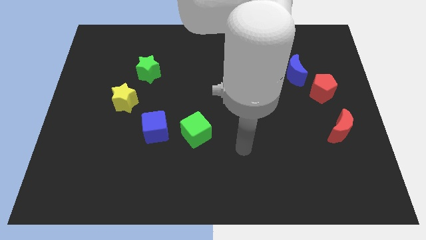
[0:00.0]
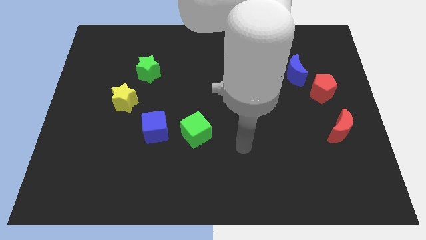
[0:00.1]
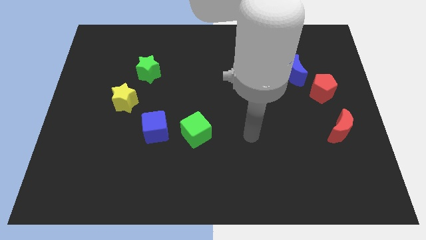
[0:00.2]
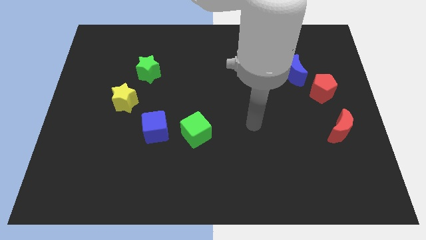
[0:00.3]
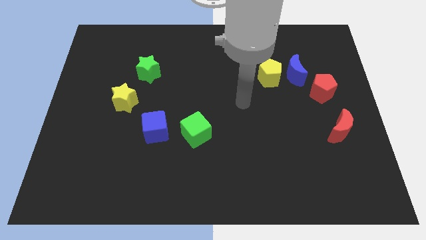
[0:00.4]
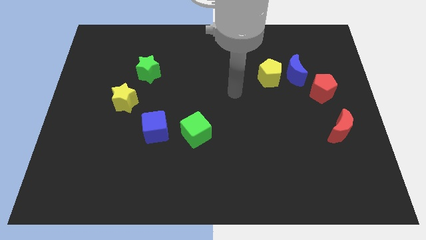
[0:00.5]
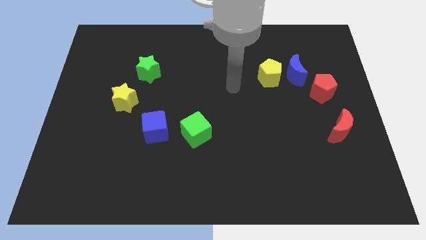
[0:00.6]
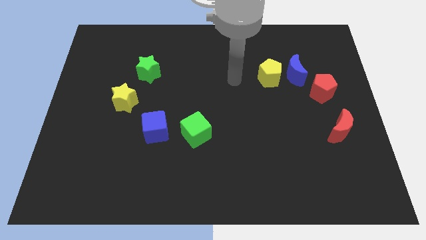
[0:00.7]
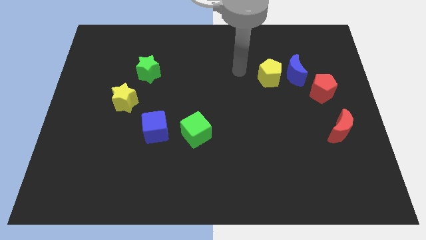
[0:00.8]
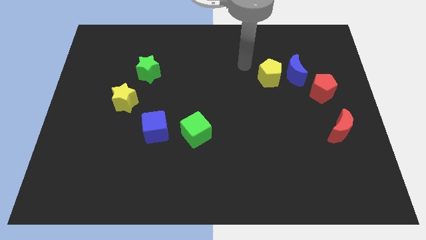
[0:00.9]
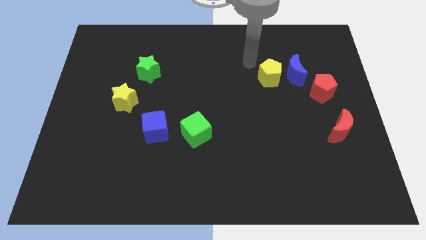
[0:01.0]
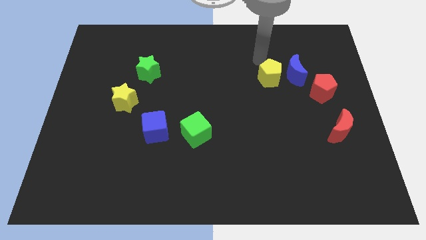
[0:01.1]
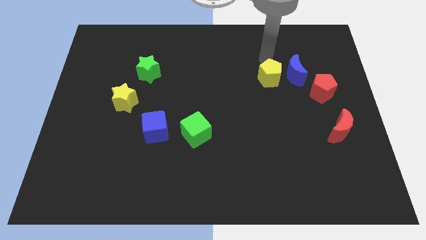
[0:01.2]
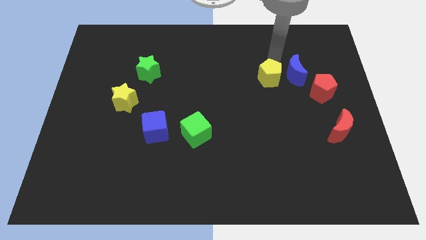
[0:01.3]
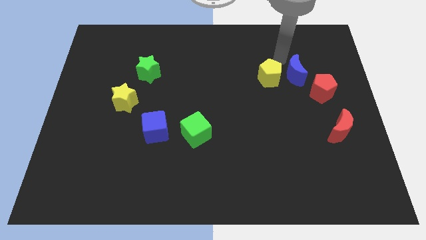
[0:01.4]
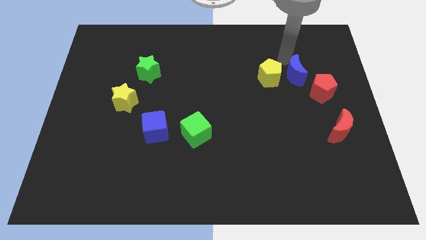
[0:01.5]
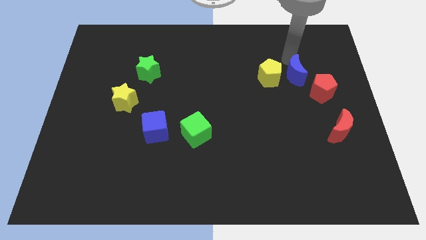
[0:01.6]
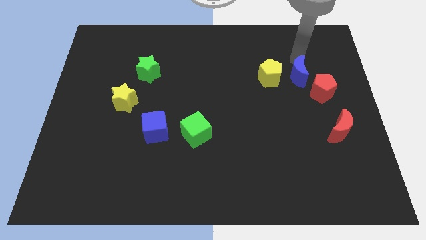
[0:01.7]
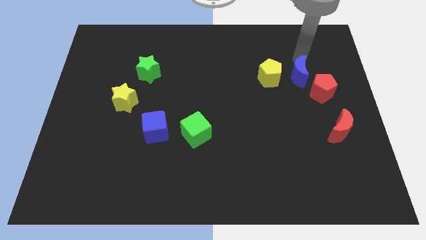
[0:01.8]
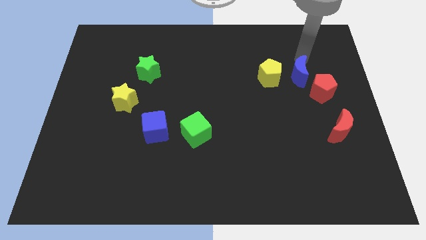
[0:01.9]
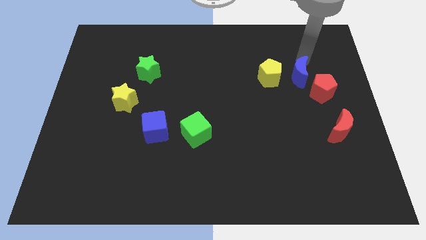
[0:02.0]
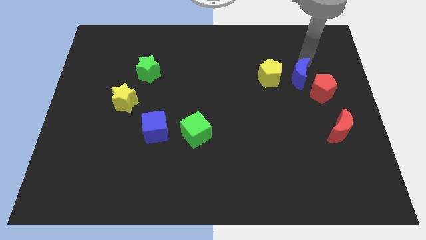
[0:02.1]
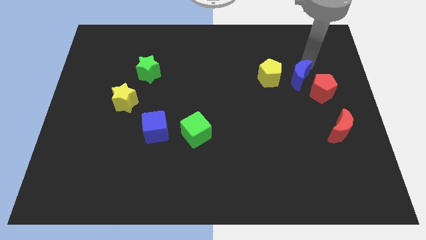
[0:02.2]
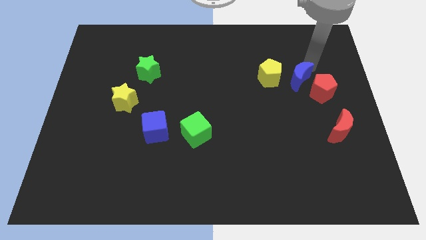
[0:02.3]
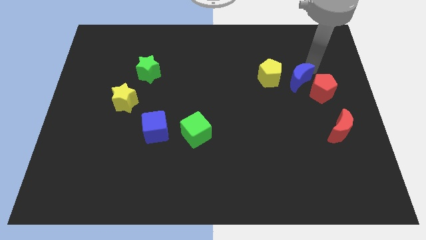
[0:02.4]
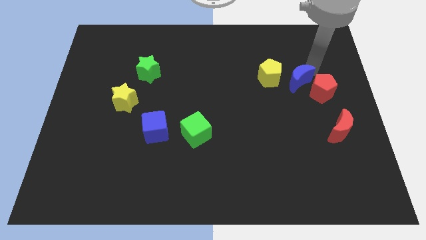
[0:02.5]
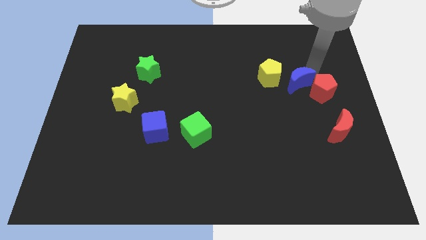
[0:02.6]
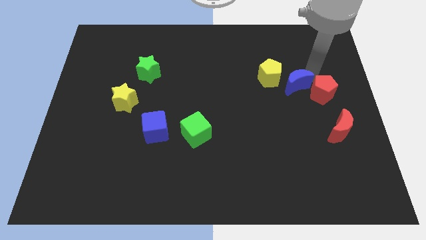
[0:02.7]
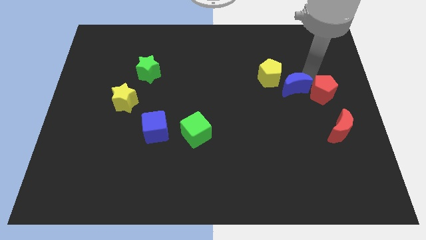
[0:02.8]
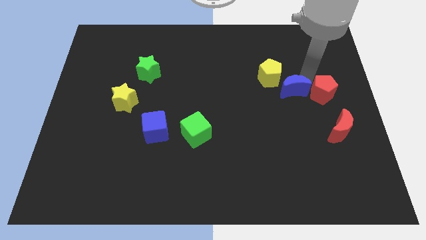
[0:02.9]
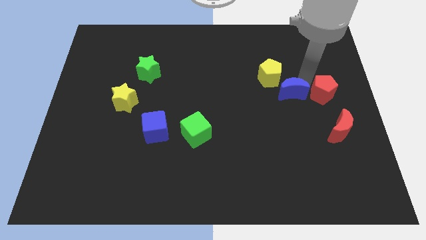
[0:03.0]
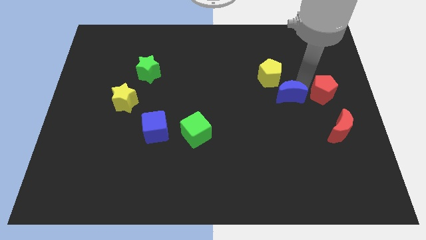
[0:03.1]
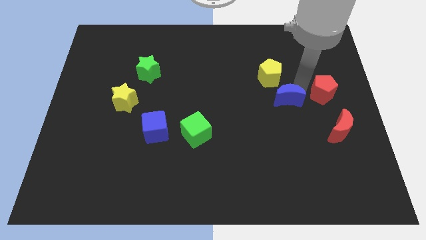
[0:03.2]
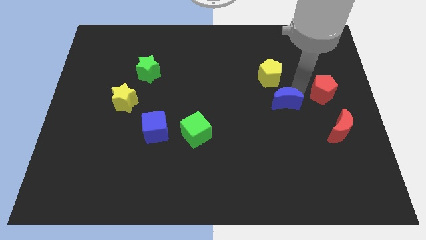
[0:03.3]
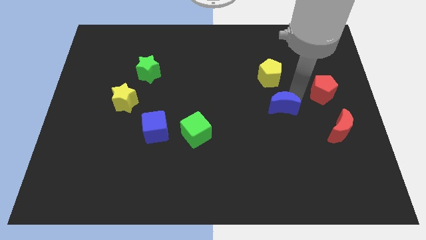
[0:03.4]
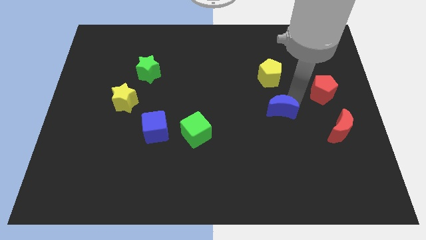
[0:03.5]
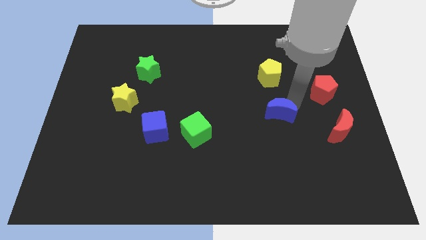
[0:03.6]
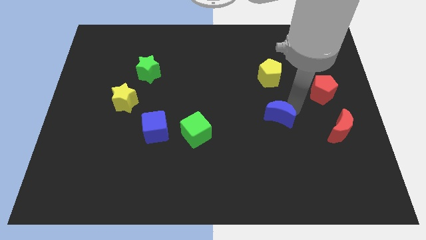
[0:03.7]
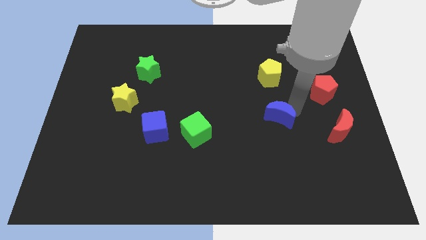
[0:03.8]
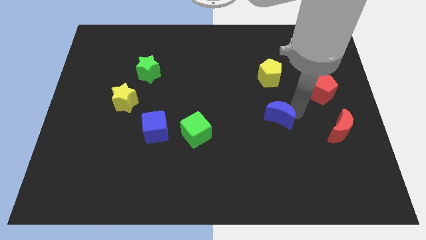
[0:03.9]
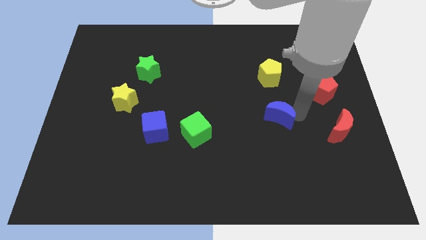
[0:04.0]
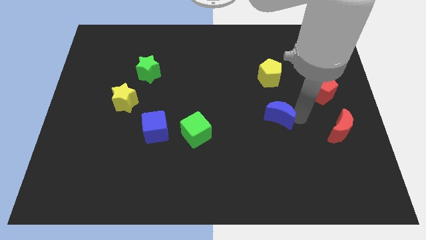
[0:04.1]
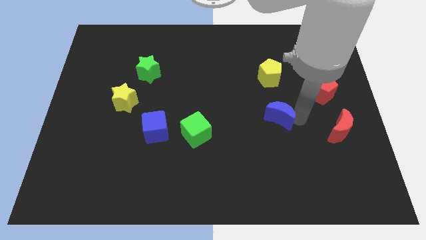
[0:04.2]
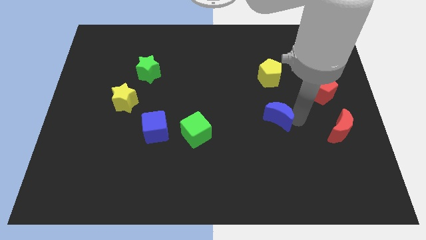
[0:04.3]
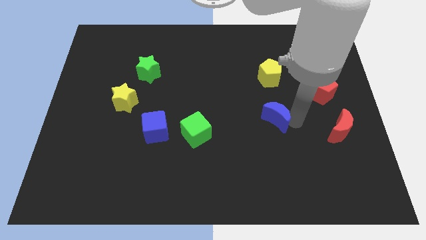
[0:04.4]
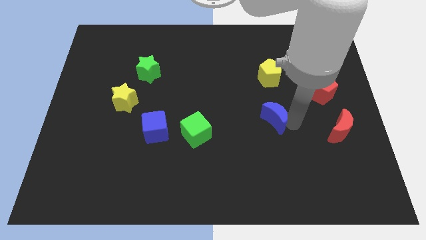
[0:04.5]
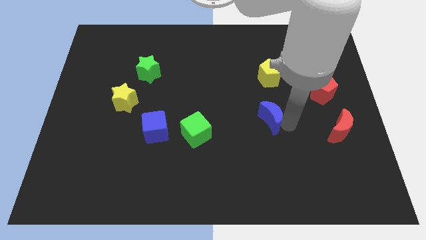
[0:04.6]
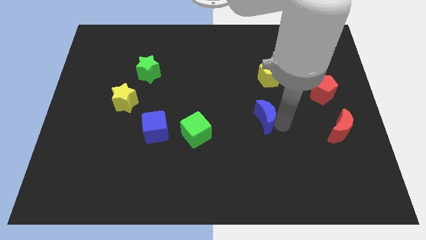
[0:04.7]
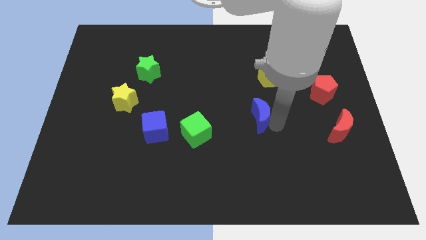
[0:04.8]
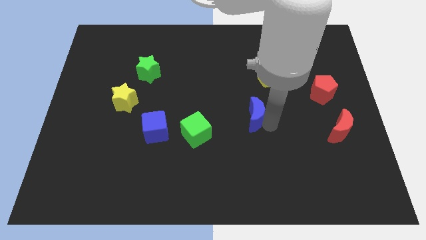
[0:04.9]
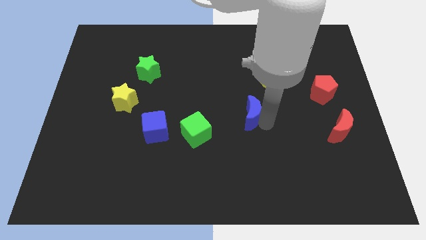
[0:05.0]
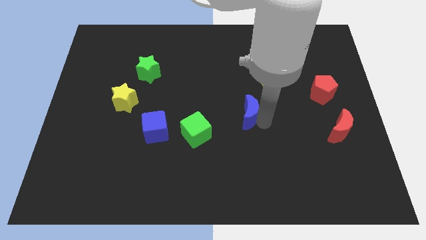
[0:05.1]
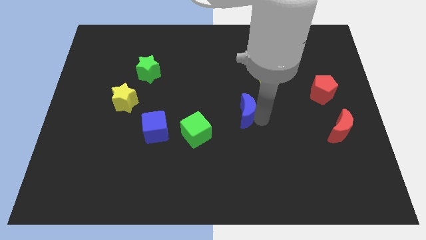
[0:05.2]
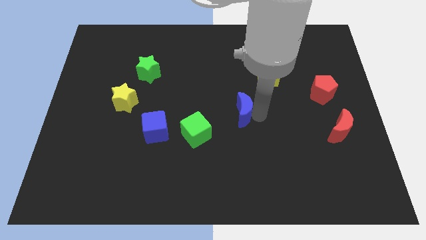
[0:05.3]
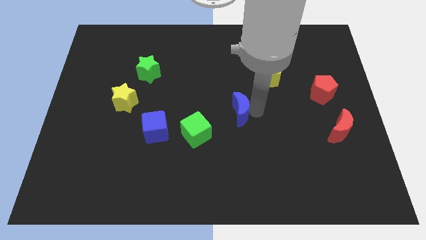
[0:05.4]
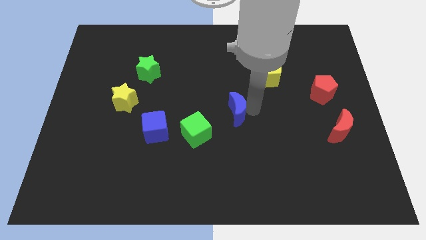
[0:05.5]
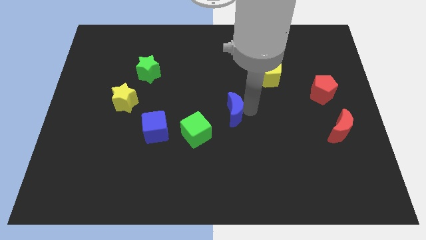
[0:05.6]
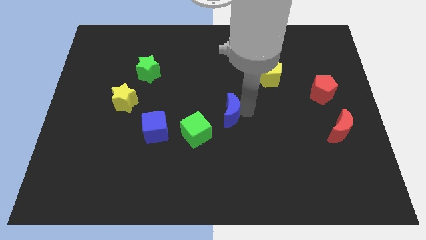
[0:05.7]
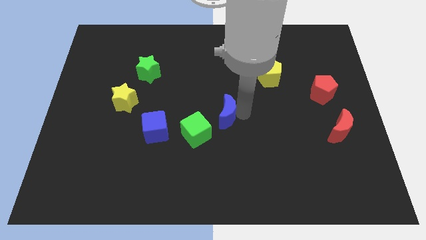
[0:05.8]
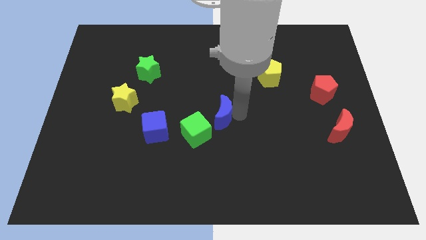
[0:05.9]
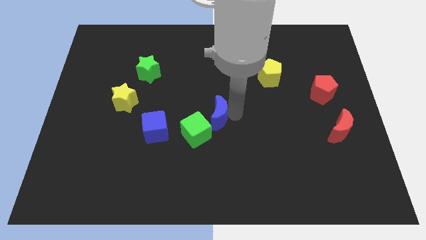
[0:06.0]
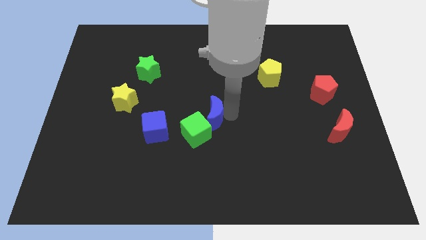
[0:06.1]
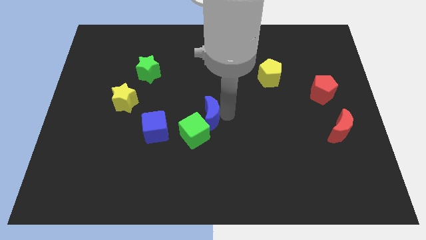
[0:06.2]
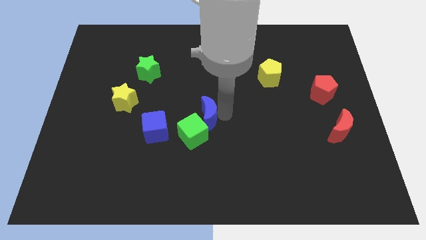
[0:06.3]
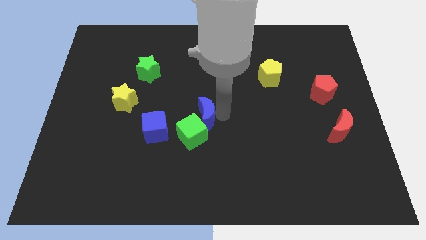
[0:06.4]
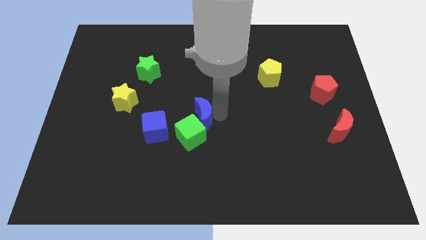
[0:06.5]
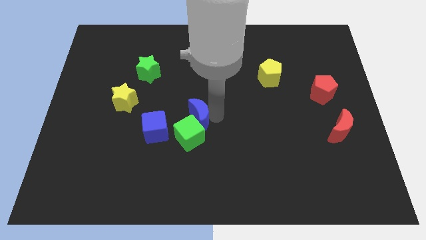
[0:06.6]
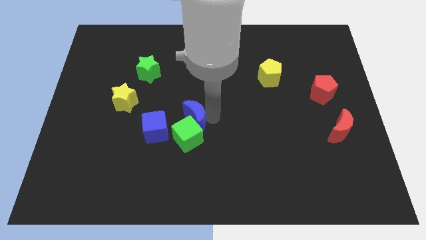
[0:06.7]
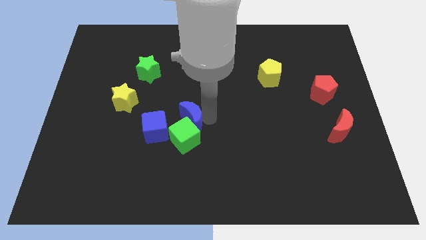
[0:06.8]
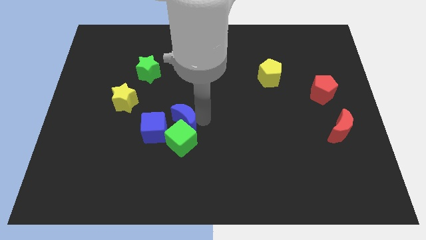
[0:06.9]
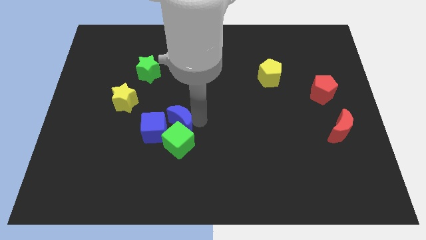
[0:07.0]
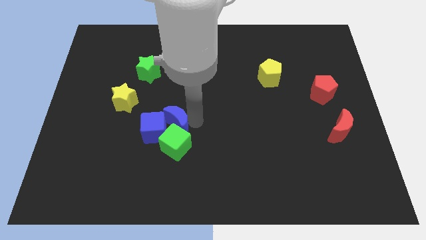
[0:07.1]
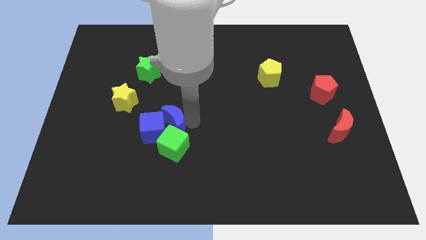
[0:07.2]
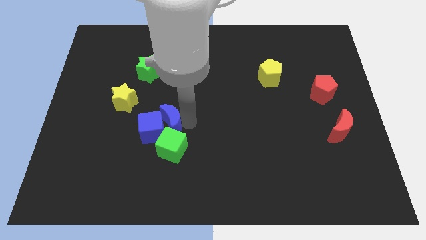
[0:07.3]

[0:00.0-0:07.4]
slide the blue moon close to the blue cube

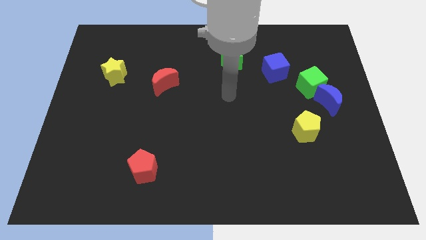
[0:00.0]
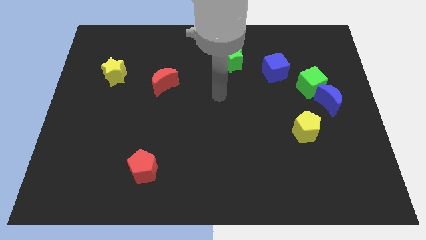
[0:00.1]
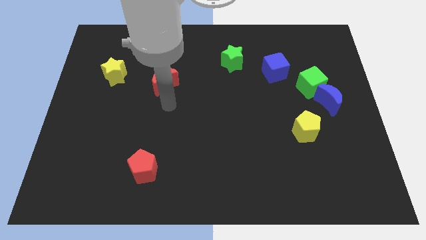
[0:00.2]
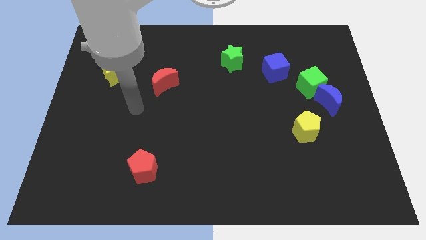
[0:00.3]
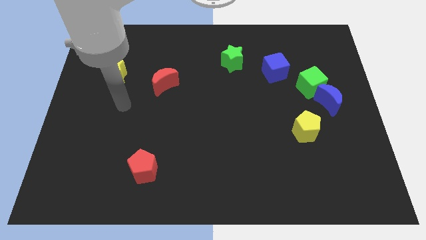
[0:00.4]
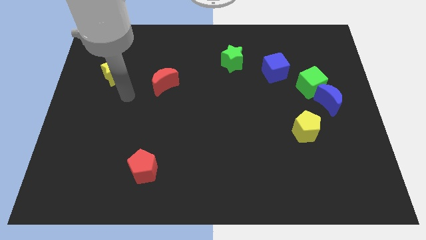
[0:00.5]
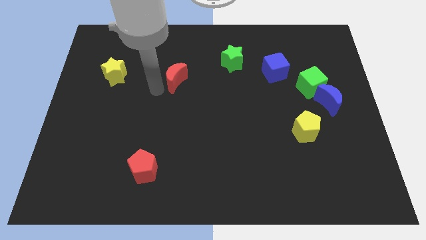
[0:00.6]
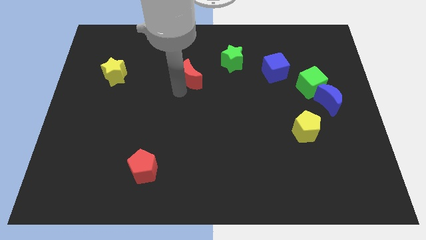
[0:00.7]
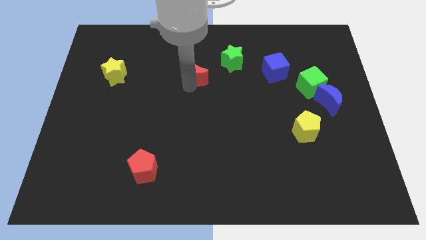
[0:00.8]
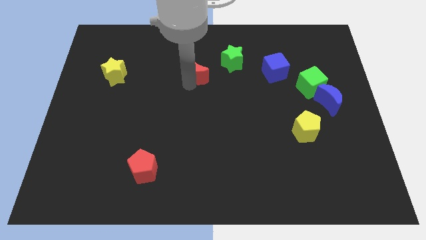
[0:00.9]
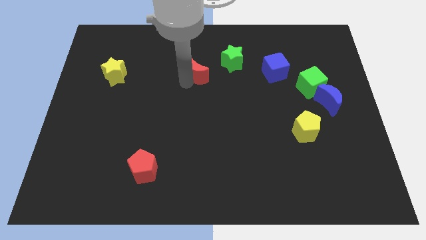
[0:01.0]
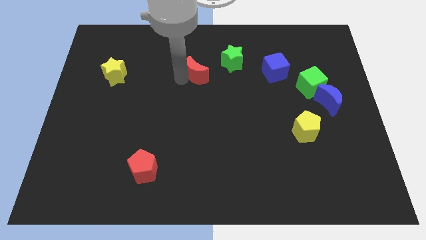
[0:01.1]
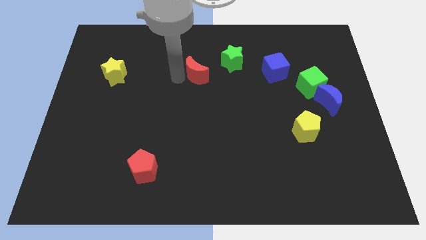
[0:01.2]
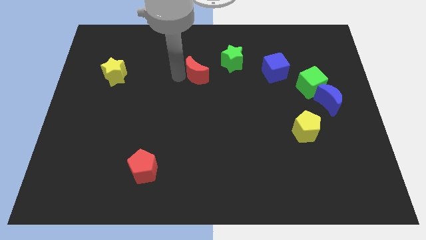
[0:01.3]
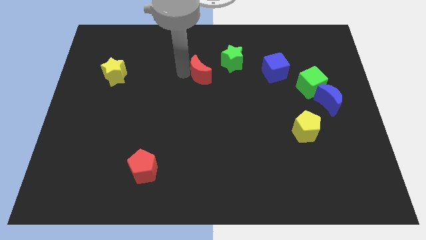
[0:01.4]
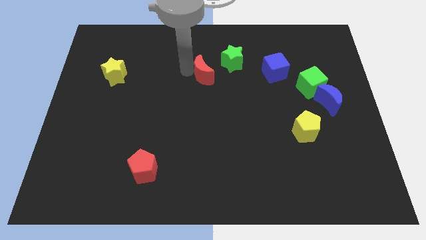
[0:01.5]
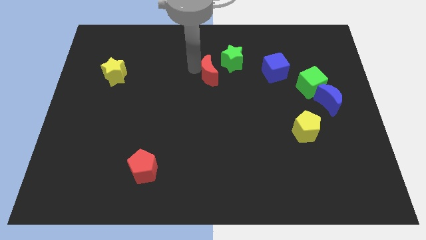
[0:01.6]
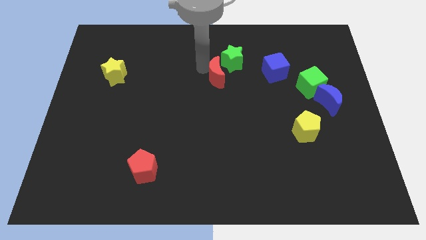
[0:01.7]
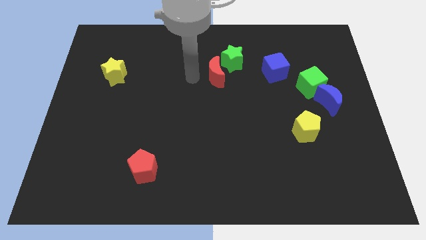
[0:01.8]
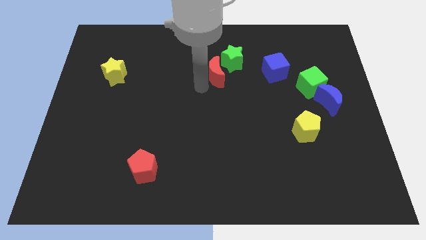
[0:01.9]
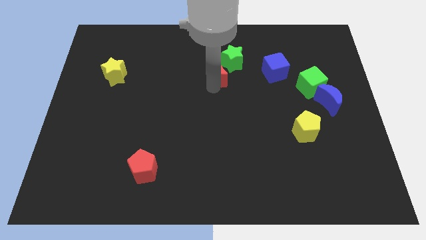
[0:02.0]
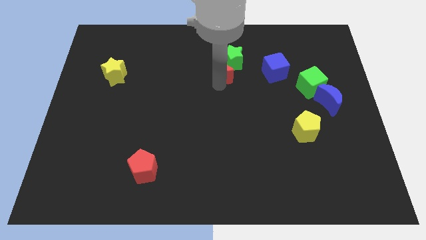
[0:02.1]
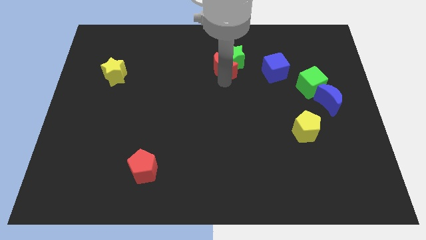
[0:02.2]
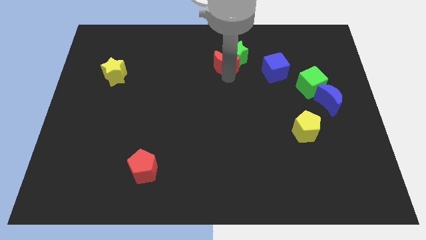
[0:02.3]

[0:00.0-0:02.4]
move the red moon towards the green star
